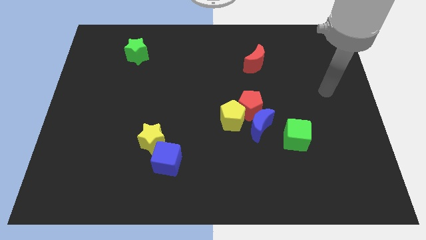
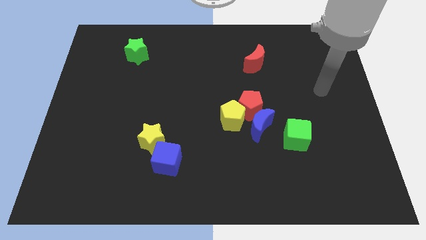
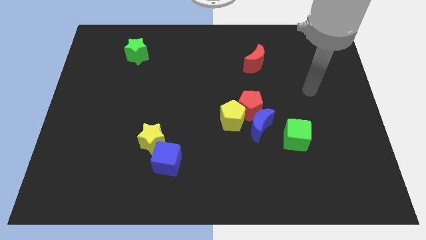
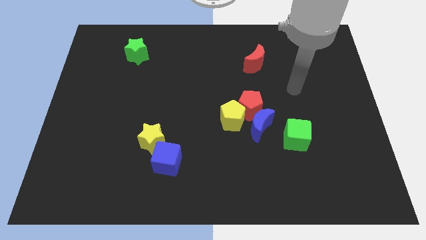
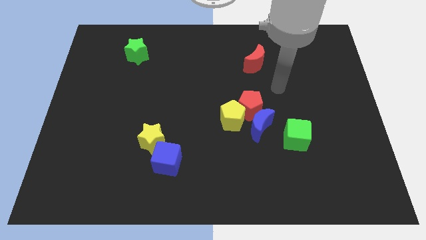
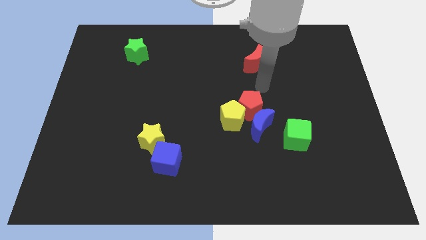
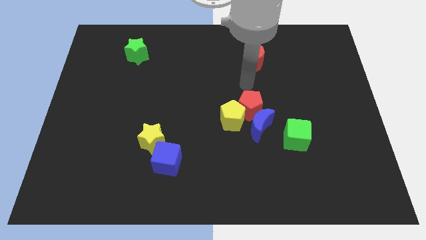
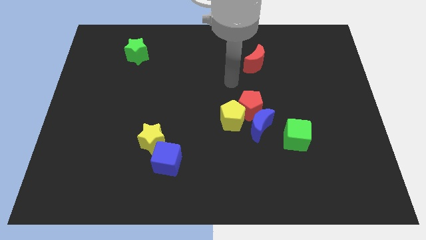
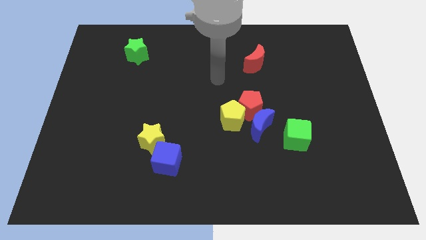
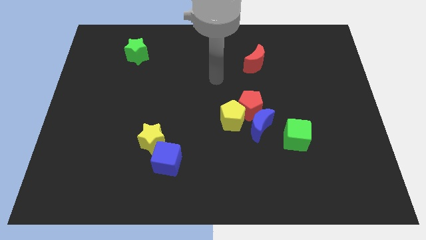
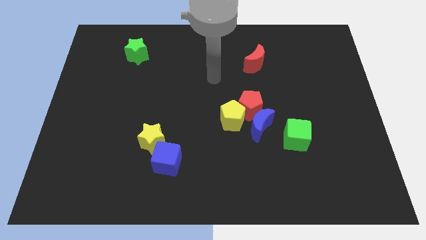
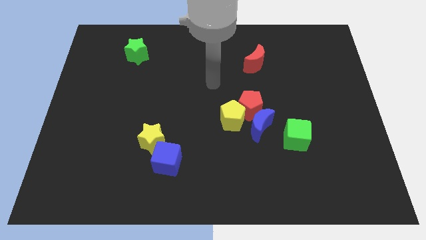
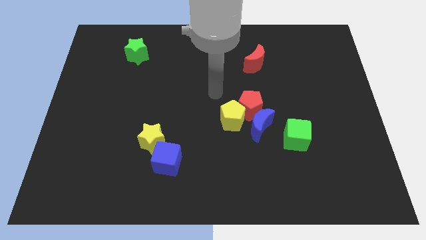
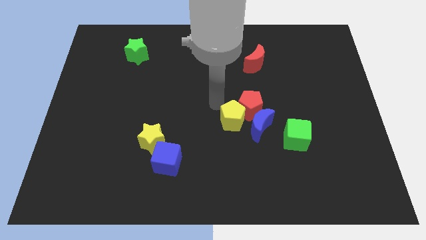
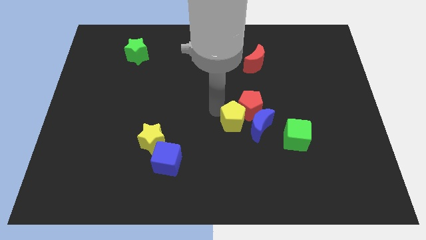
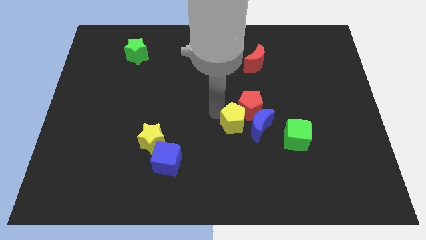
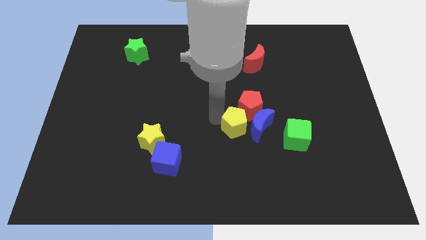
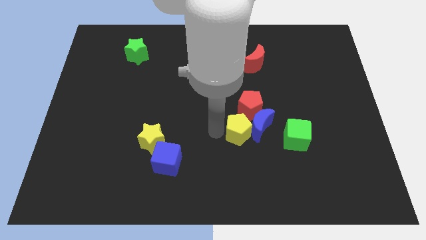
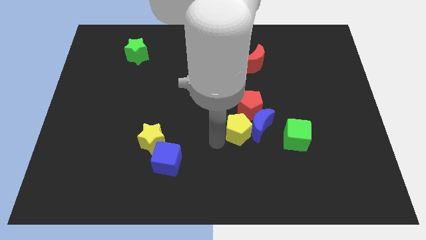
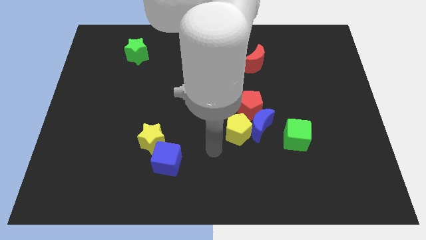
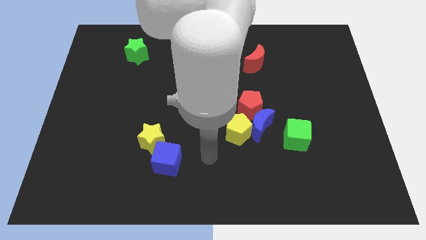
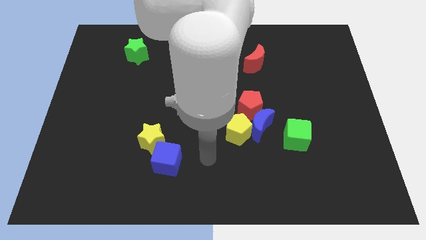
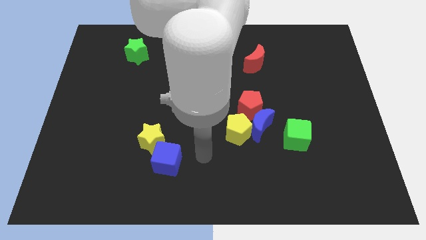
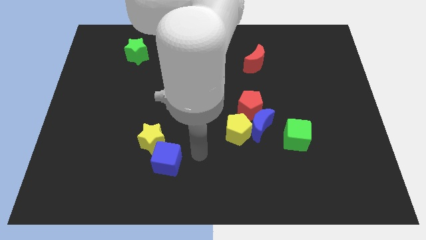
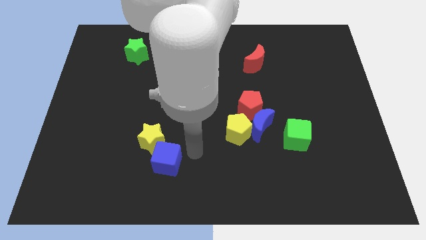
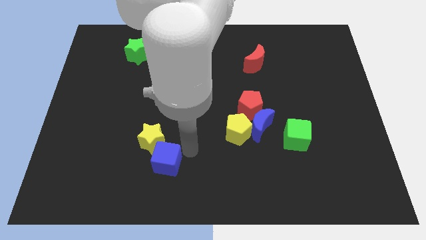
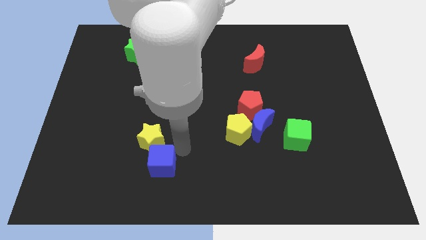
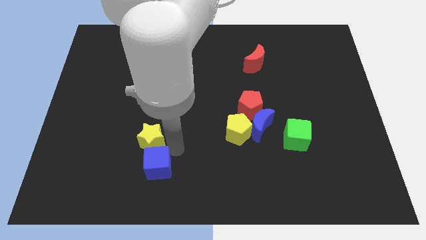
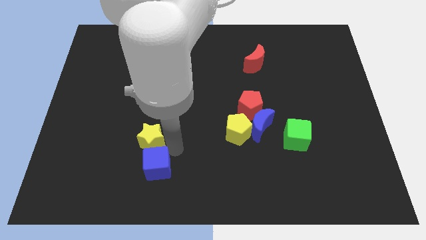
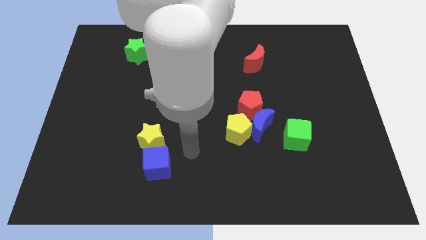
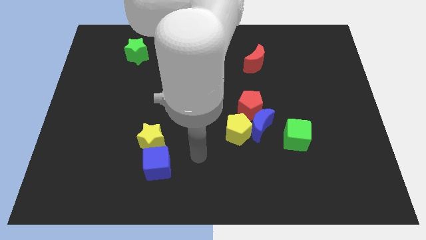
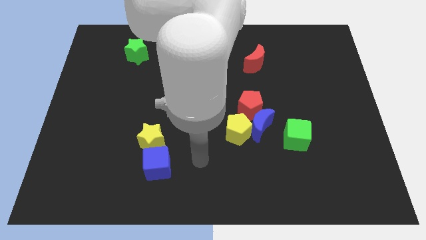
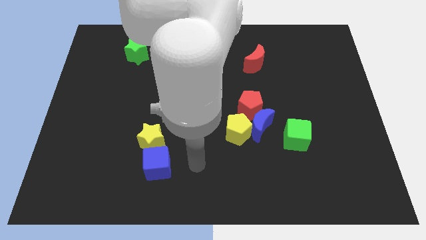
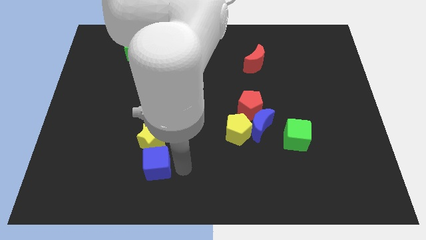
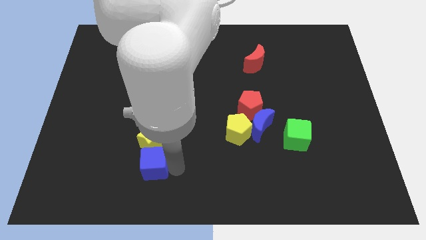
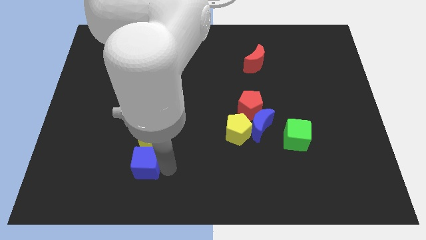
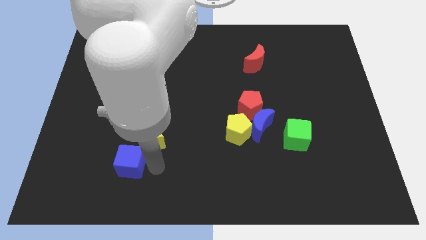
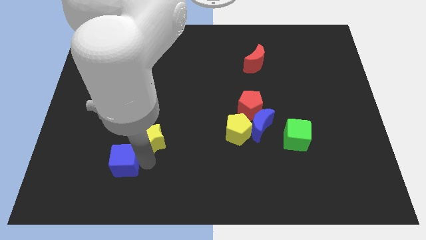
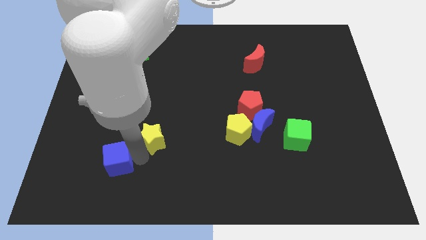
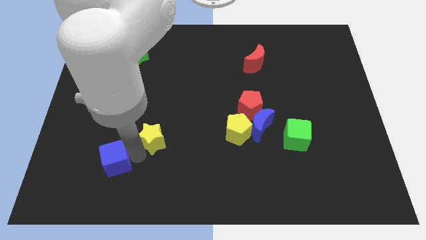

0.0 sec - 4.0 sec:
place your arm in between the blue cube and yellow star

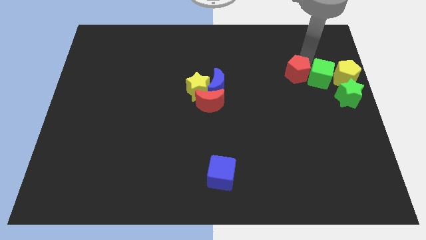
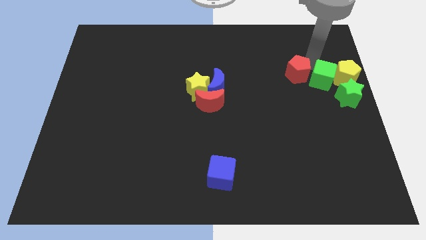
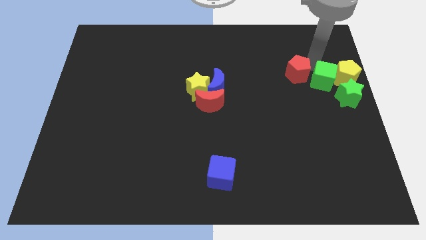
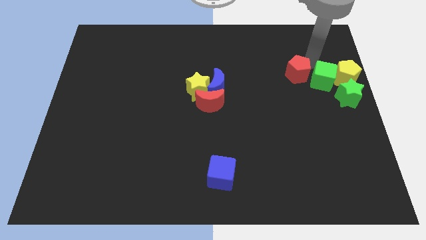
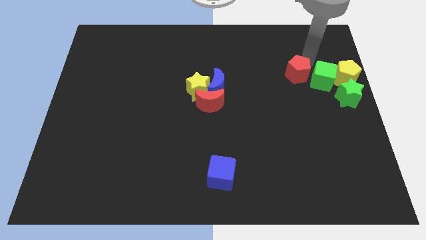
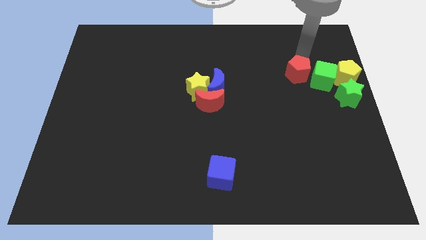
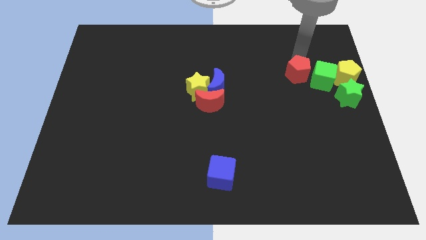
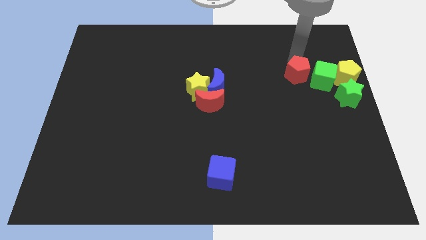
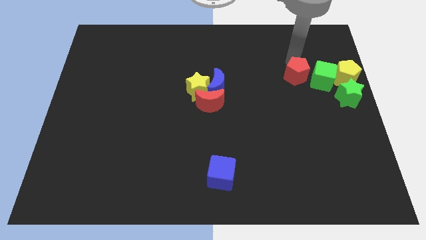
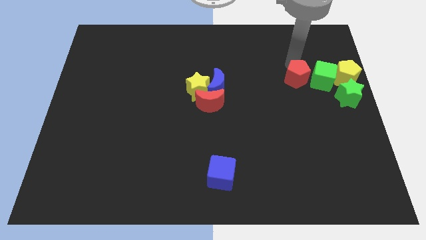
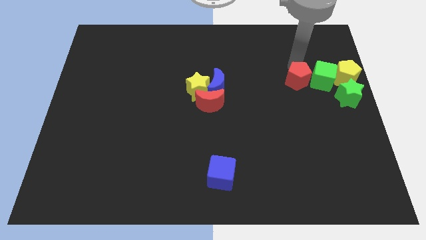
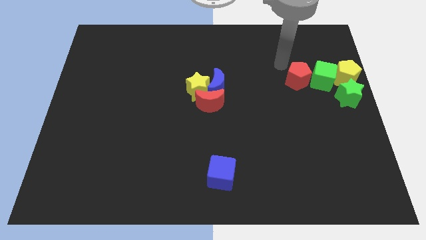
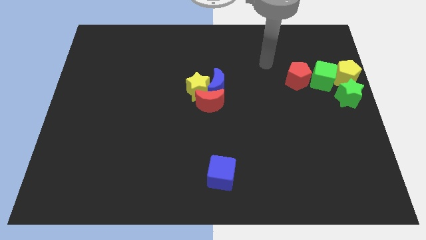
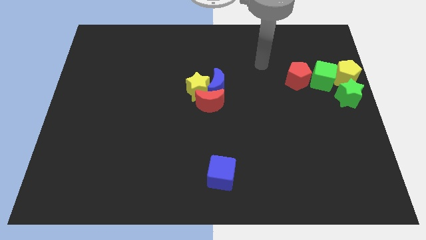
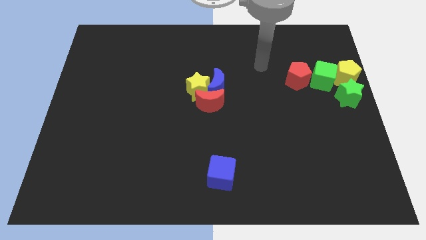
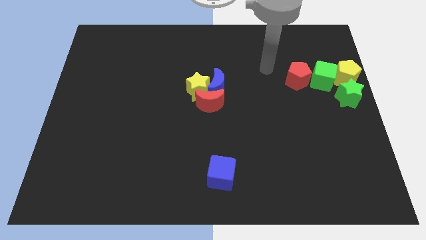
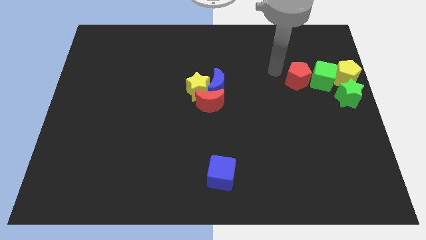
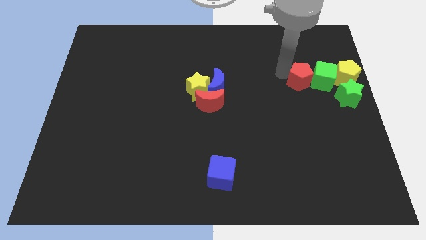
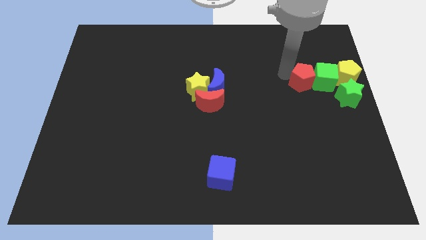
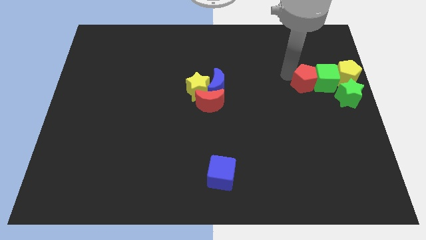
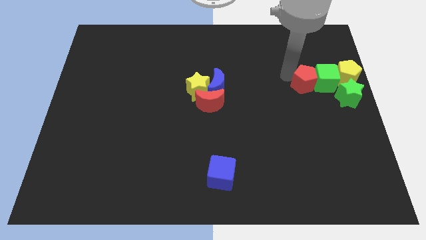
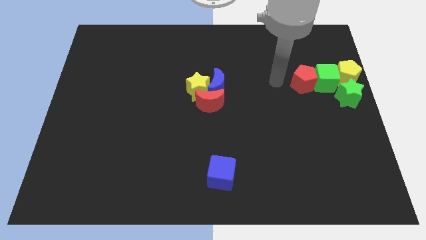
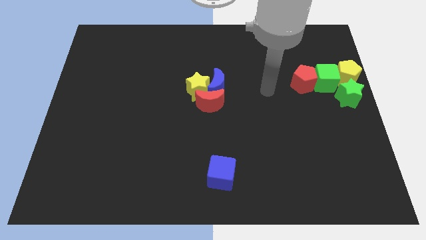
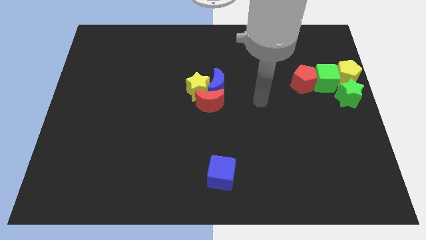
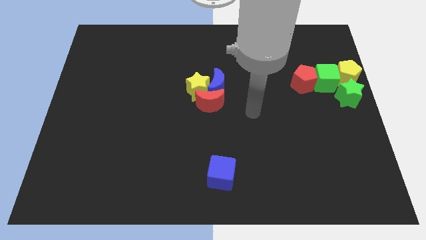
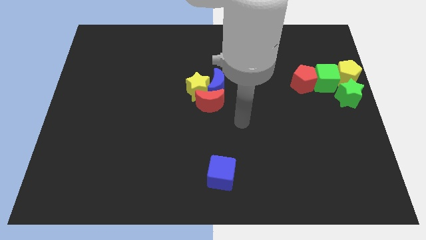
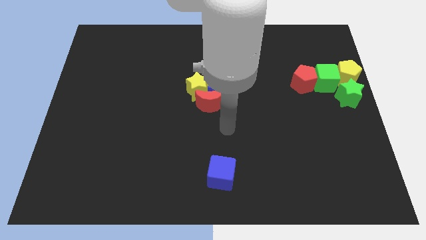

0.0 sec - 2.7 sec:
adjust the green cube and red pentagon in a horizontal line at the left of the yellow pentagon

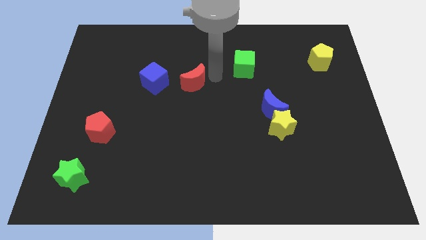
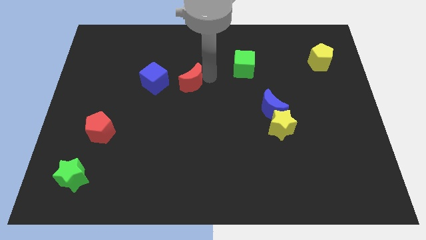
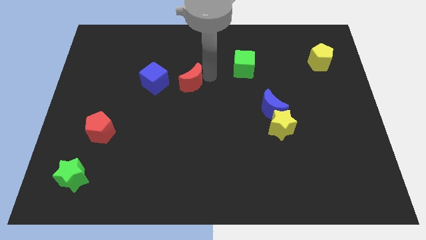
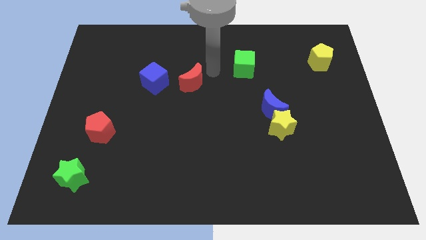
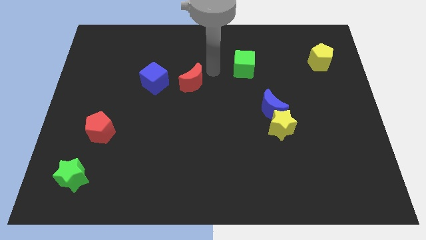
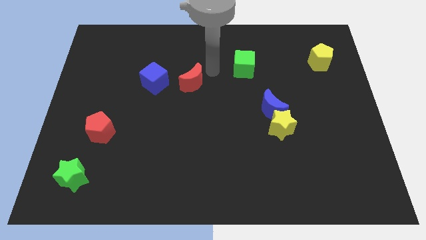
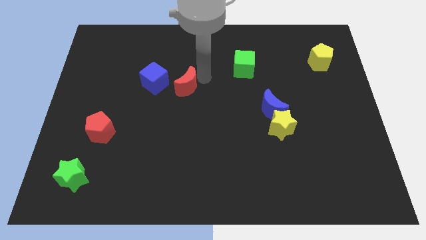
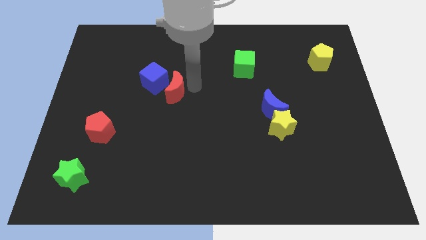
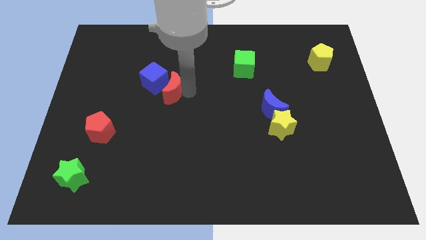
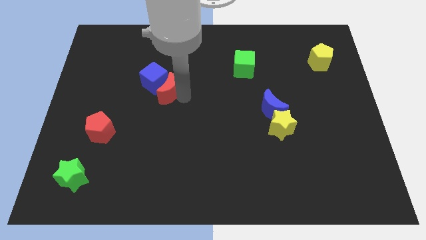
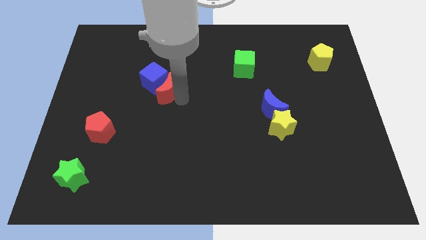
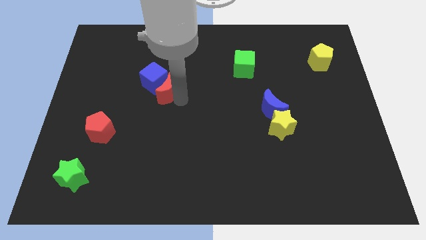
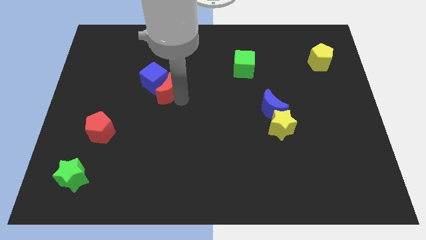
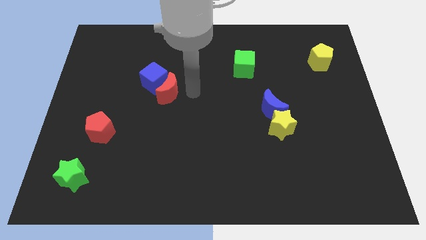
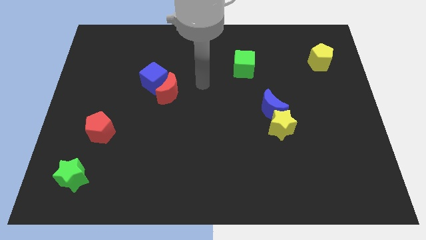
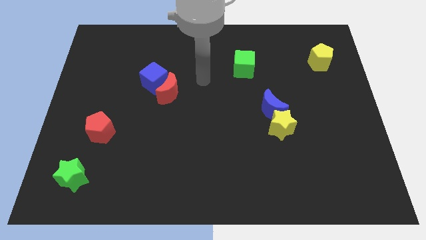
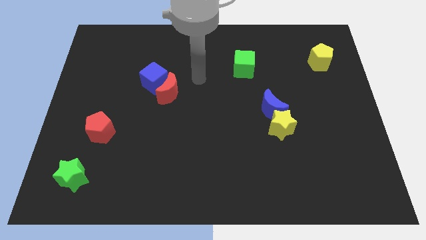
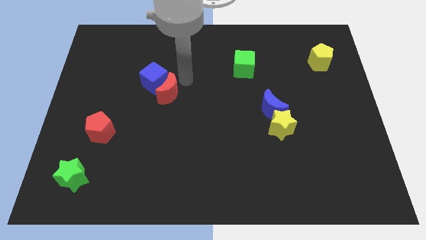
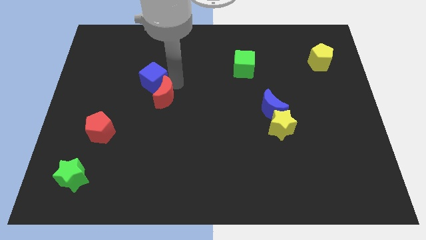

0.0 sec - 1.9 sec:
move the red moon near to the blue cube

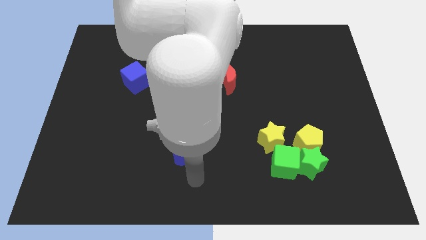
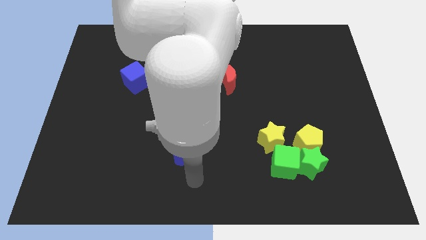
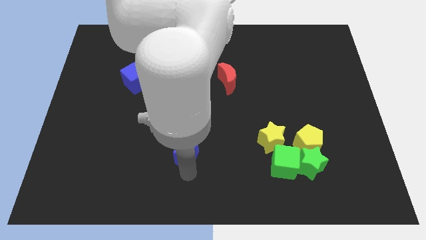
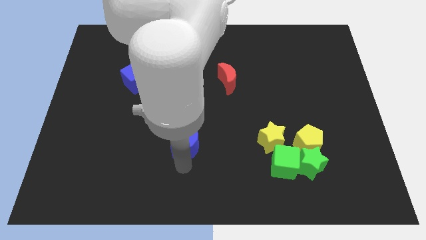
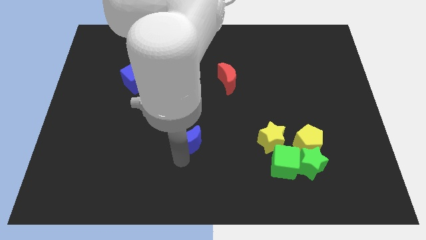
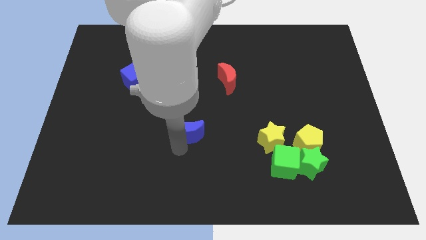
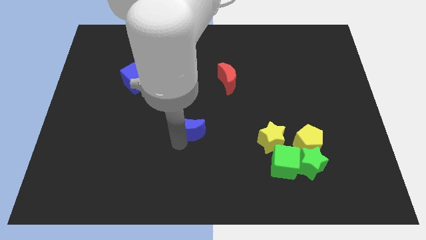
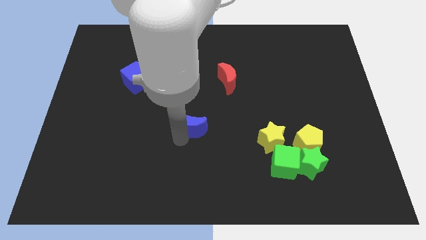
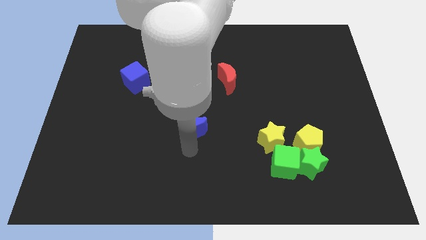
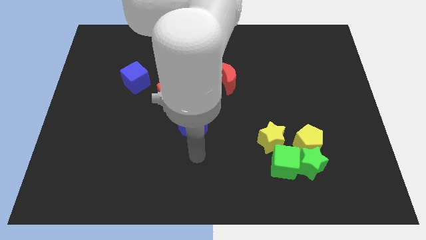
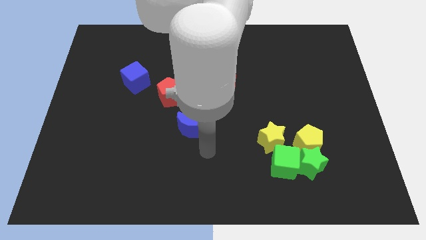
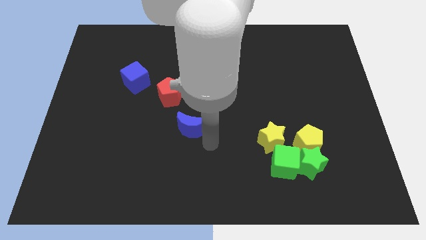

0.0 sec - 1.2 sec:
slide the blue crescent slightly towards up
